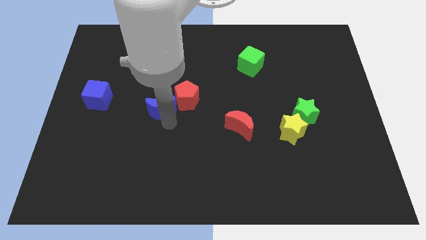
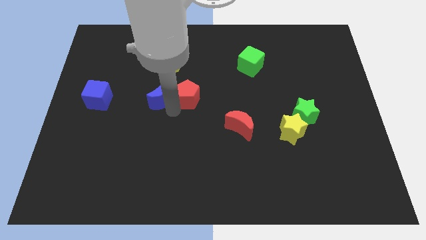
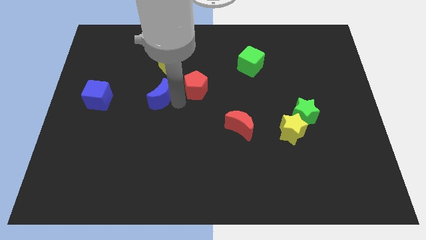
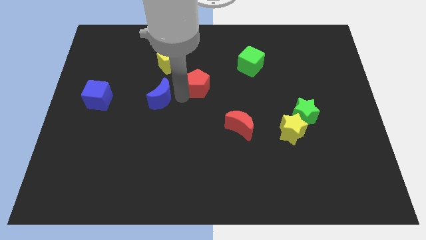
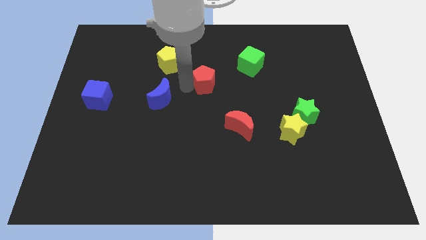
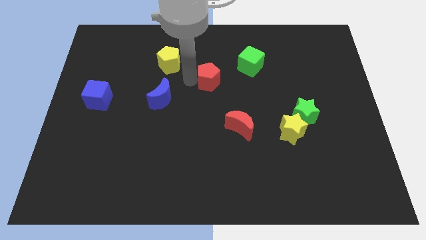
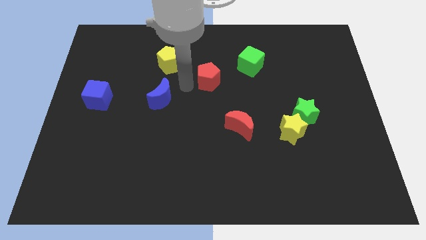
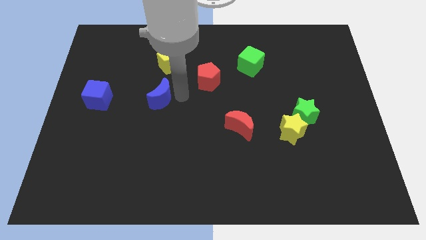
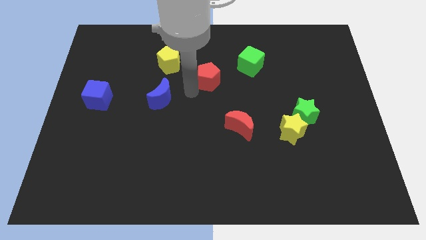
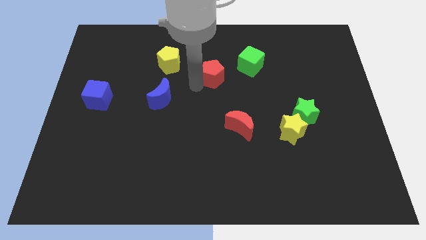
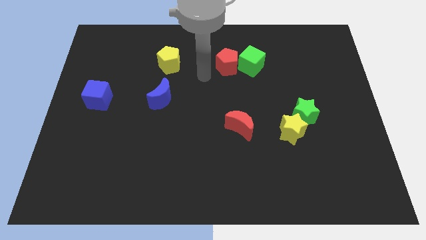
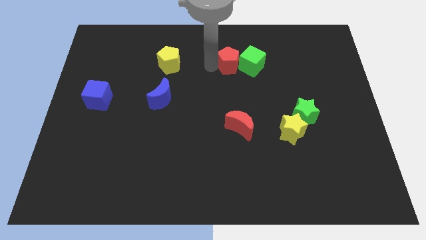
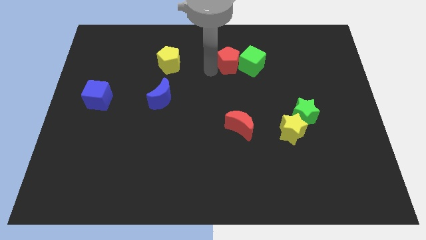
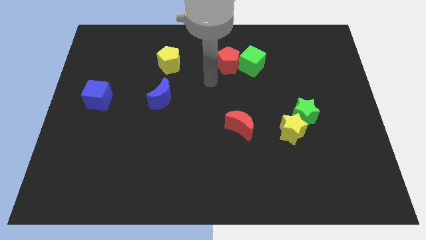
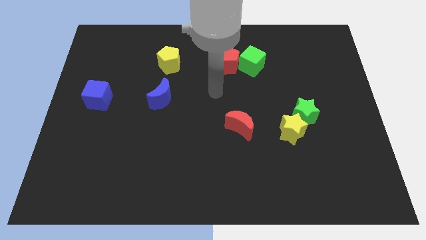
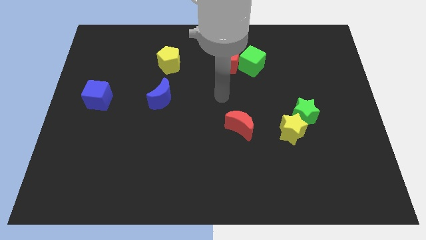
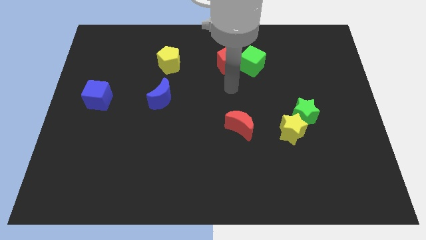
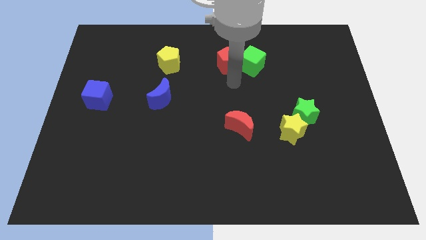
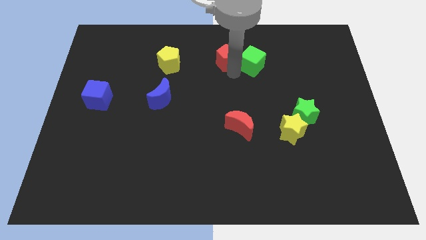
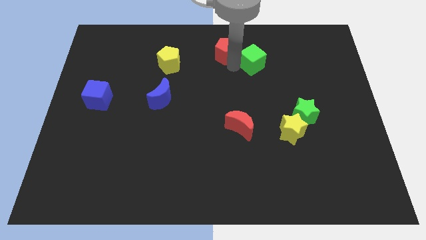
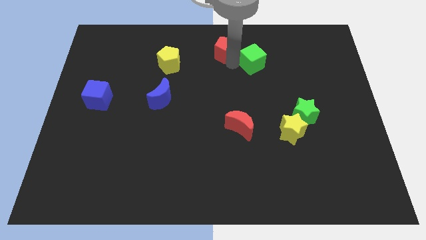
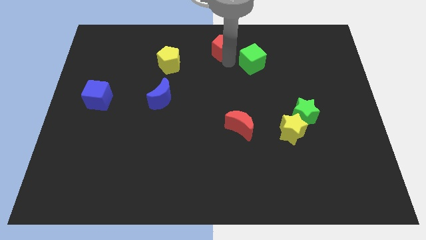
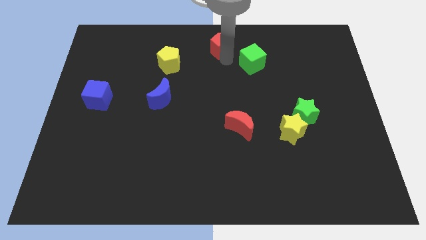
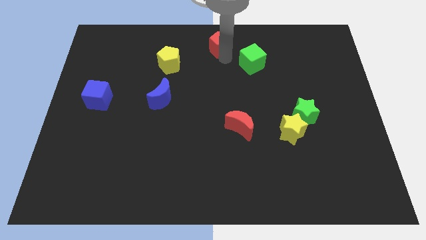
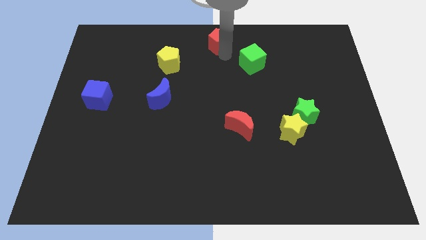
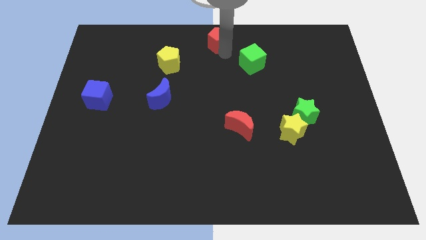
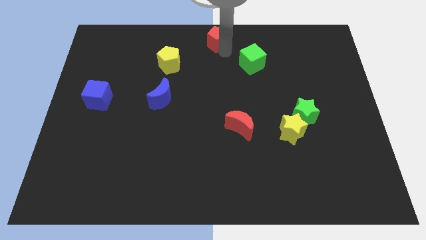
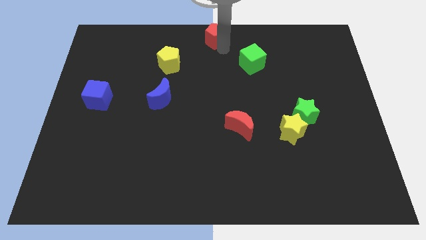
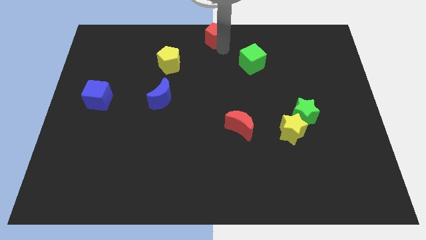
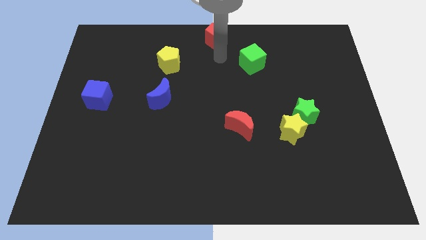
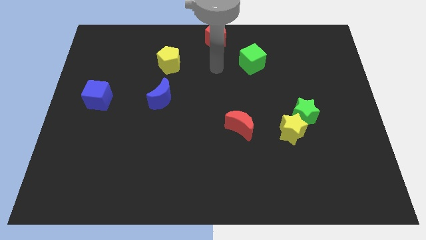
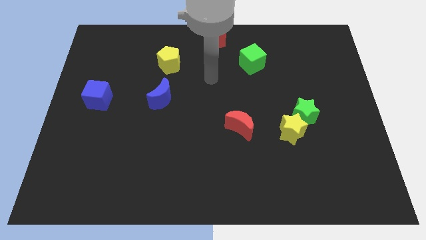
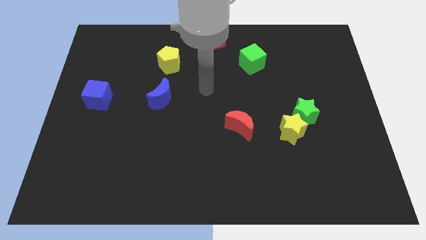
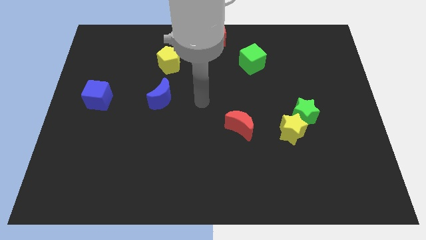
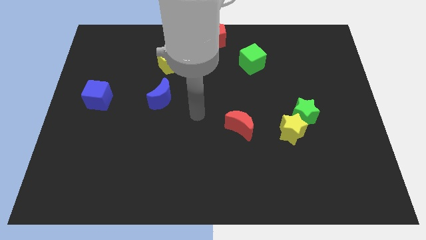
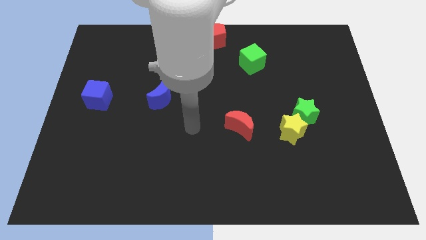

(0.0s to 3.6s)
move the red pentagon to the top center of the board

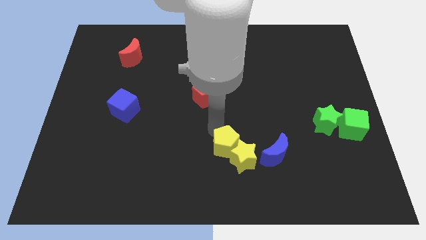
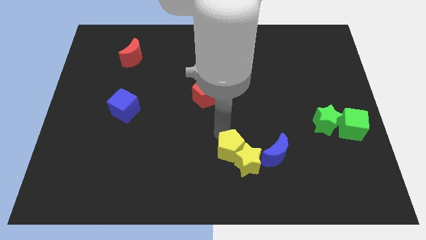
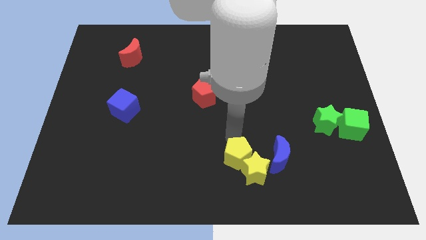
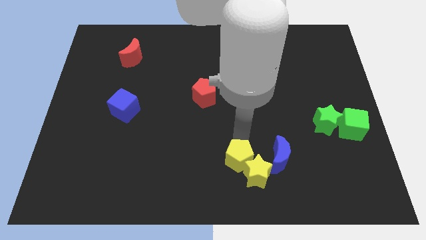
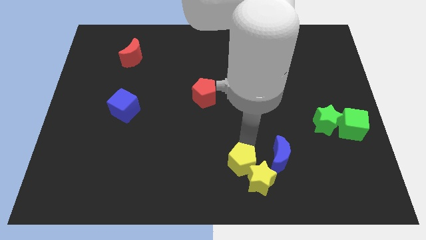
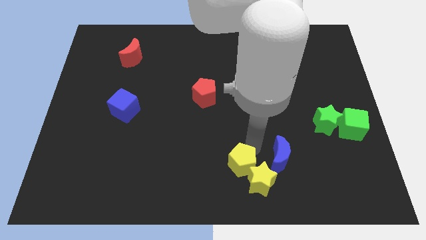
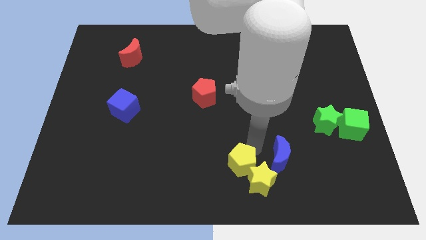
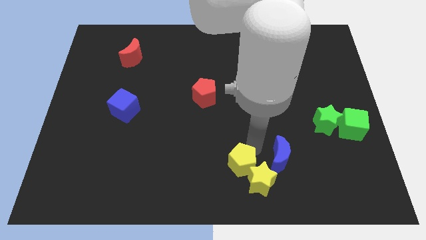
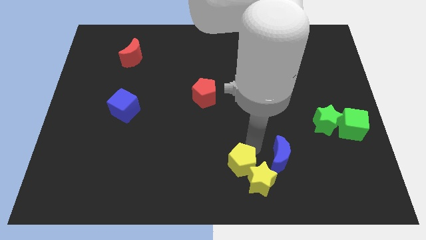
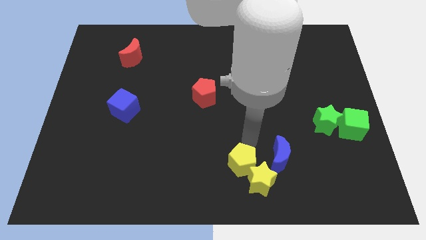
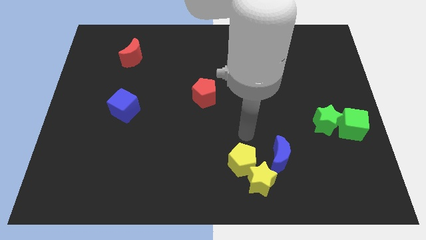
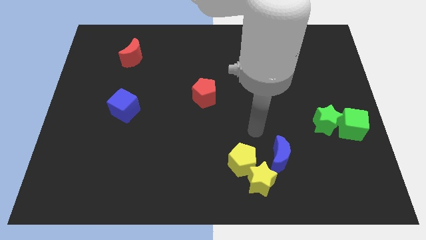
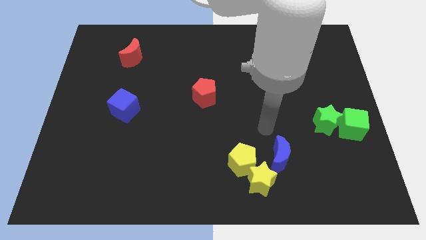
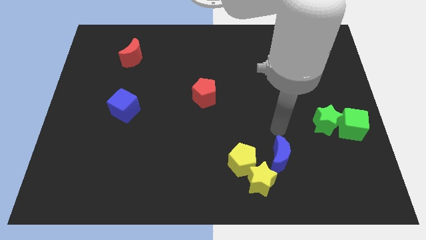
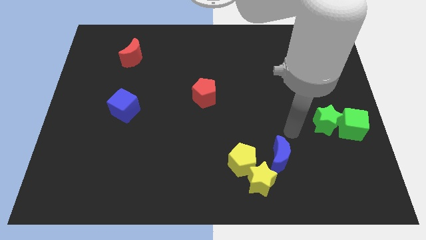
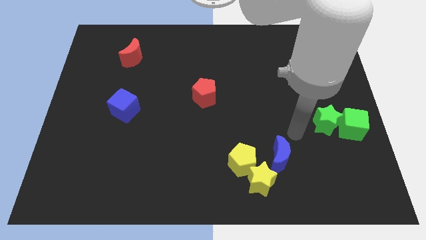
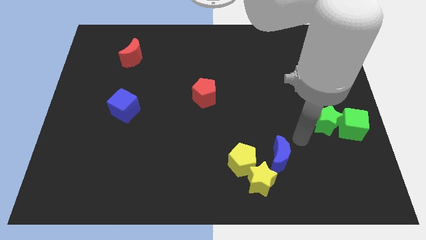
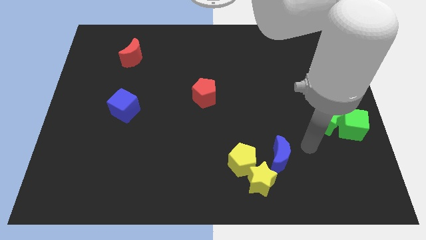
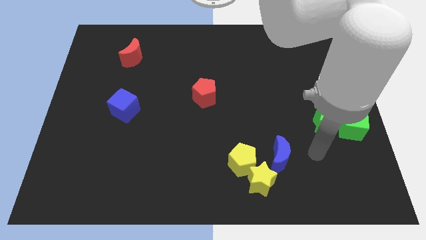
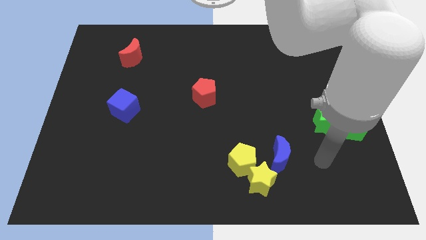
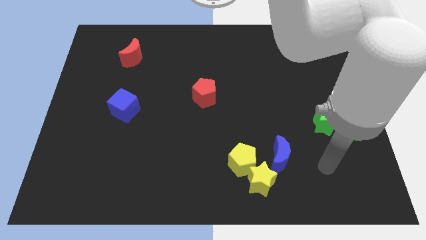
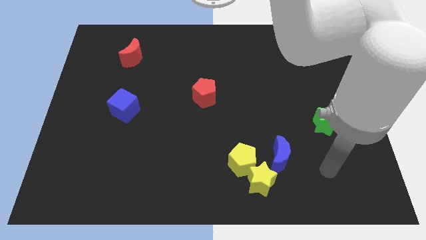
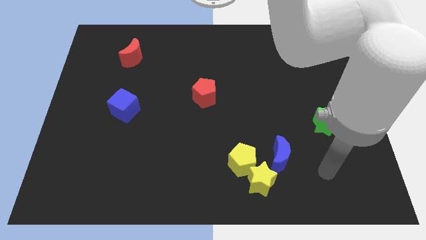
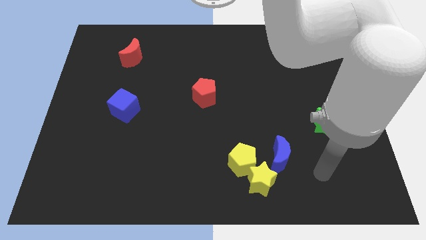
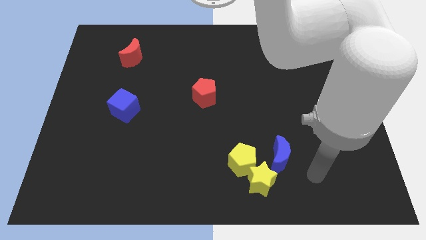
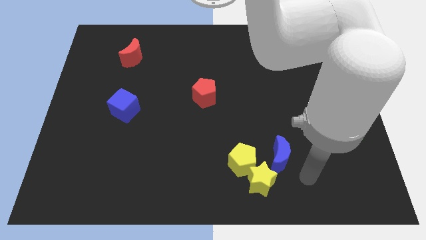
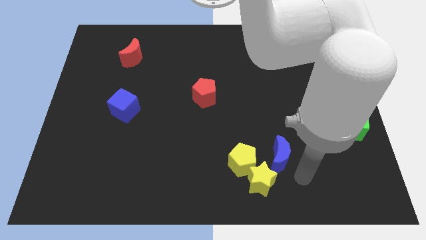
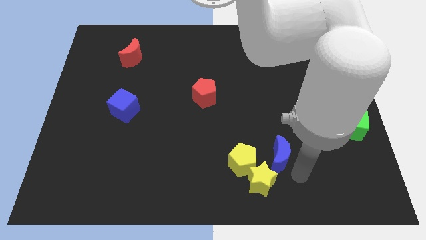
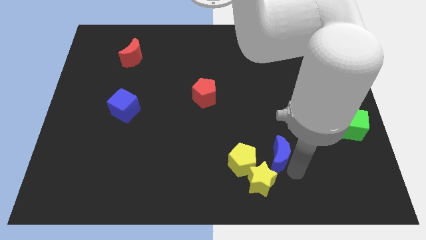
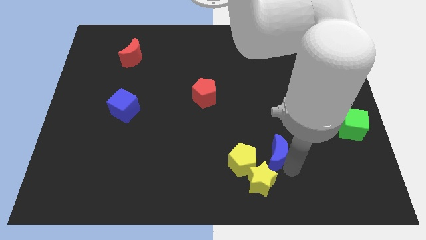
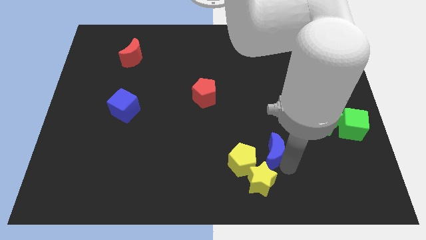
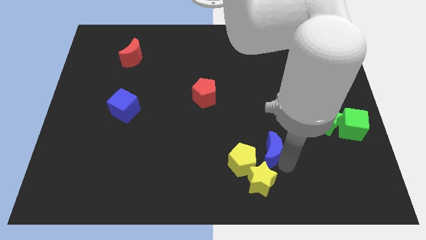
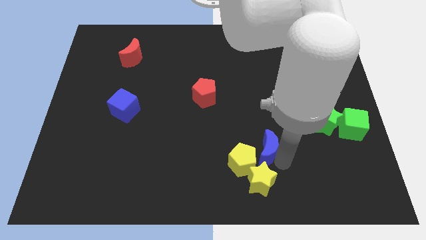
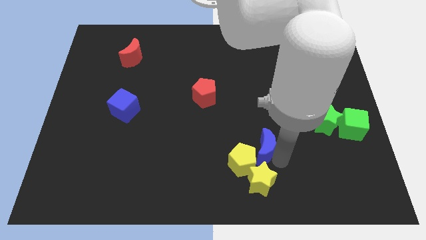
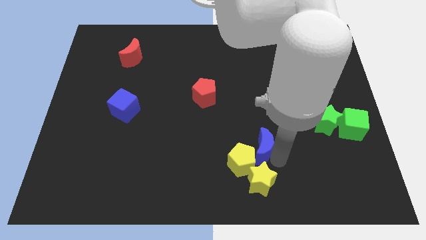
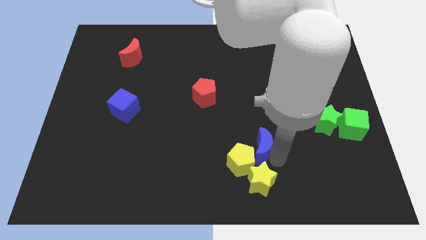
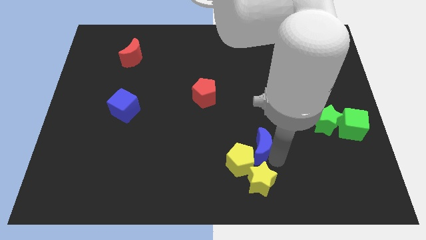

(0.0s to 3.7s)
put the blue semicircle and yellow pentagon together

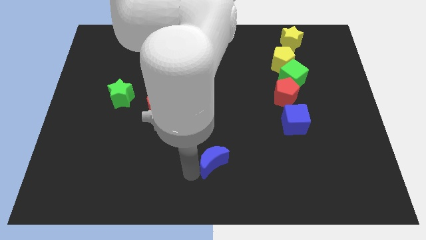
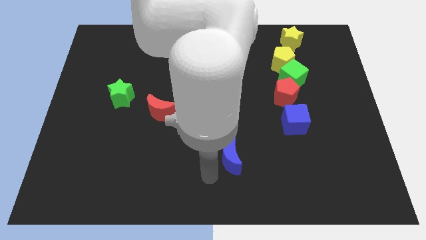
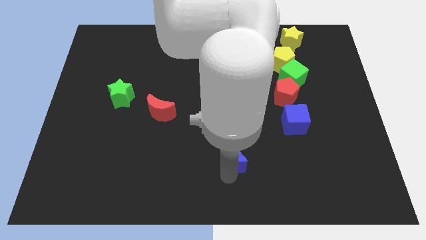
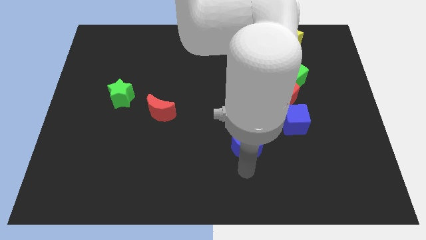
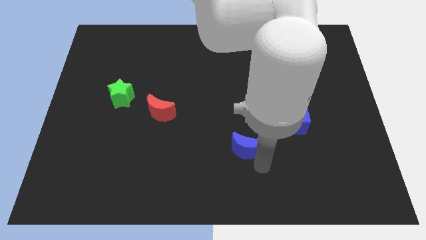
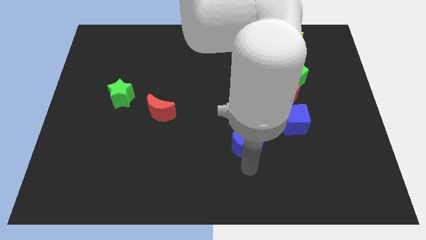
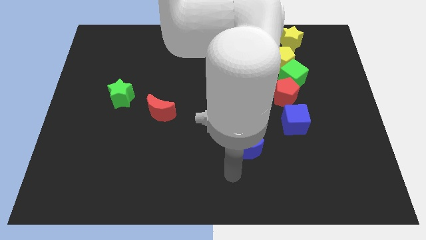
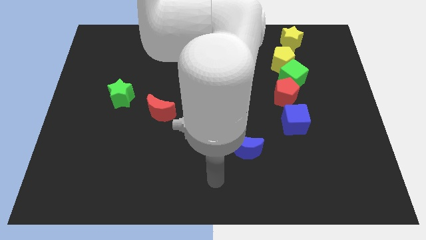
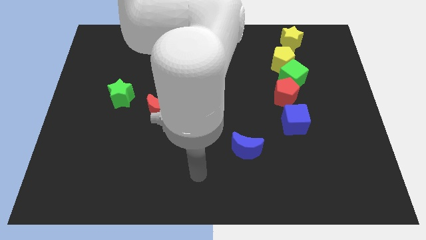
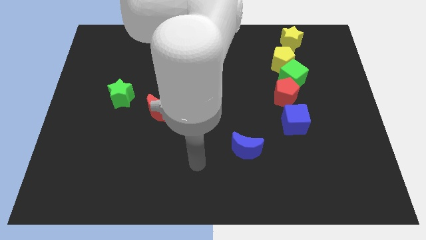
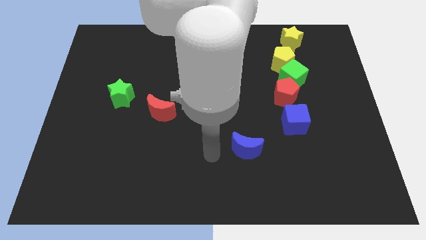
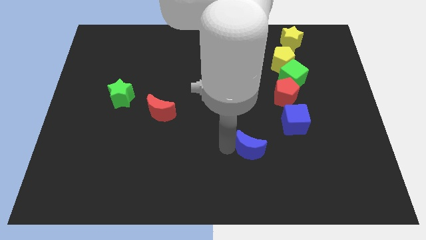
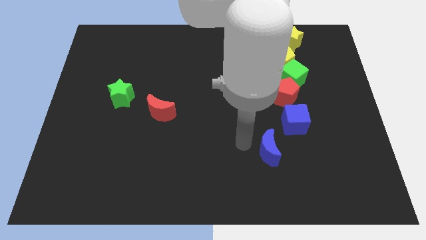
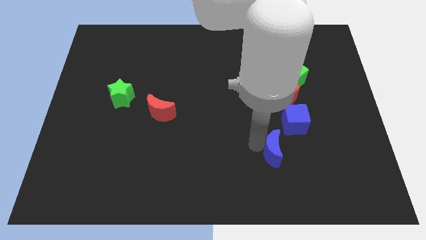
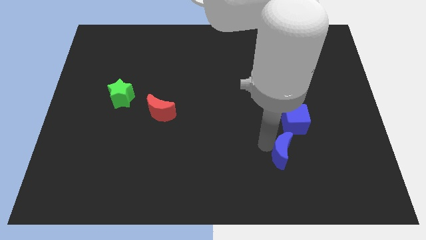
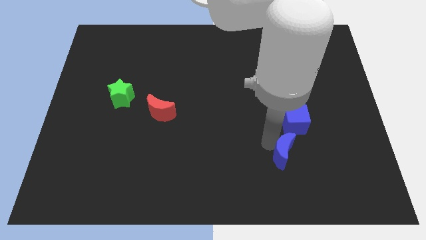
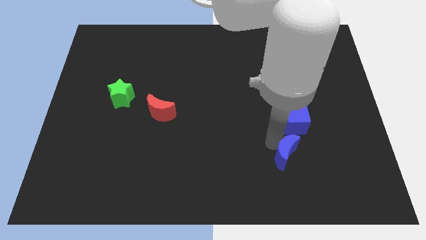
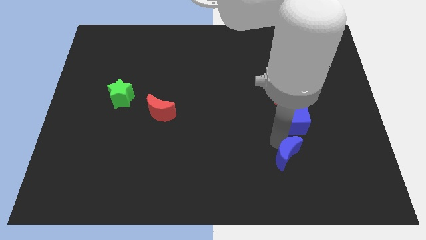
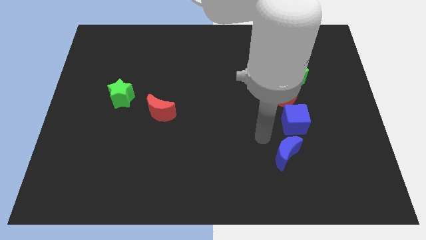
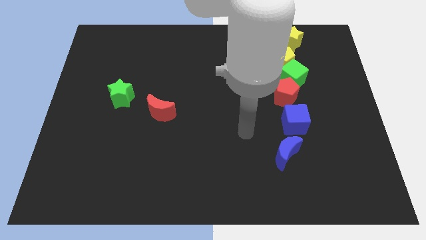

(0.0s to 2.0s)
place blue moon below blue cube
